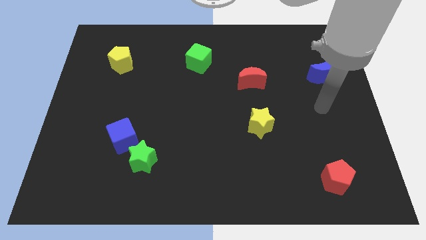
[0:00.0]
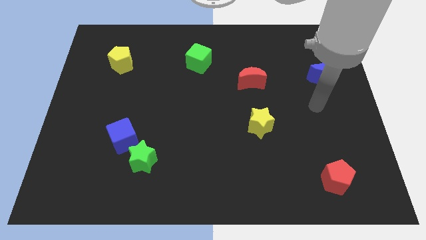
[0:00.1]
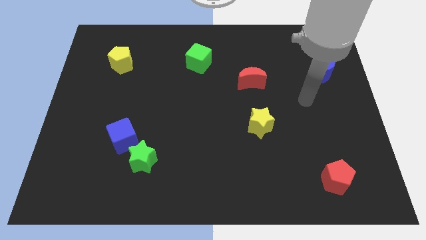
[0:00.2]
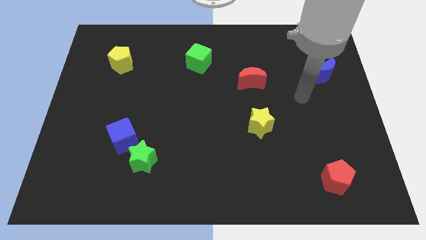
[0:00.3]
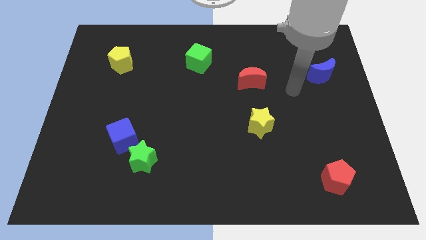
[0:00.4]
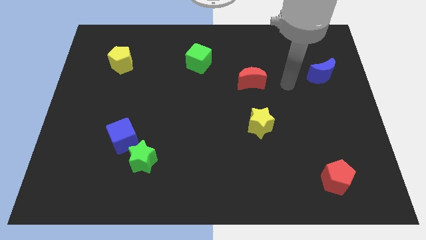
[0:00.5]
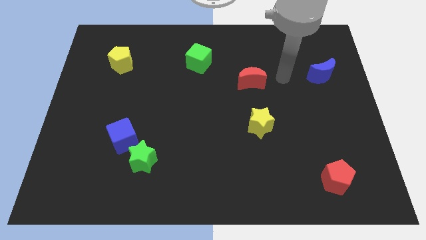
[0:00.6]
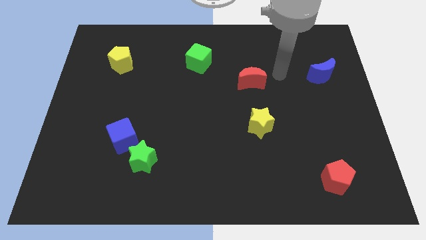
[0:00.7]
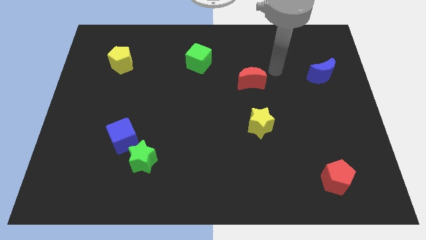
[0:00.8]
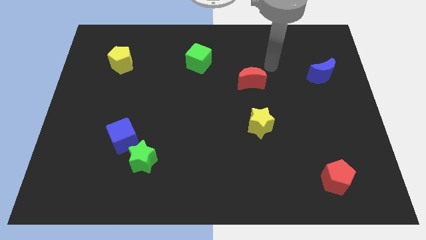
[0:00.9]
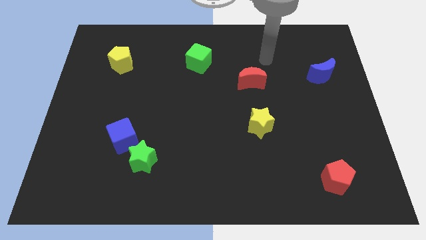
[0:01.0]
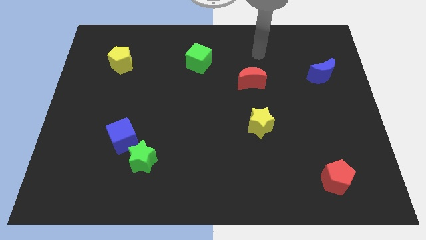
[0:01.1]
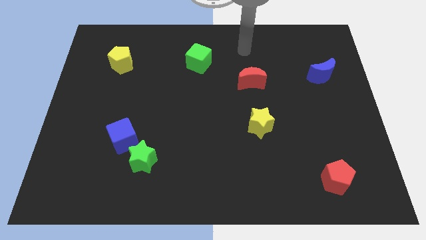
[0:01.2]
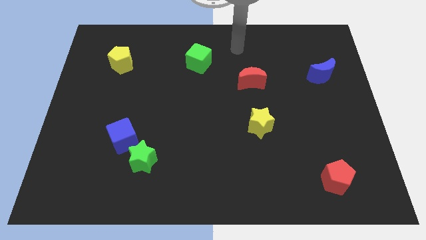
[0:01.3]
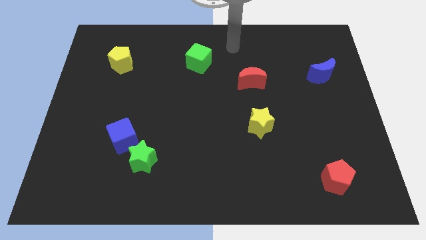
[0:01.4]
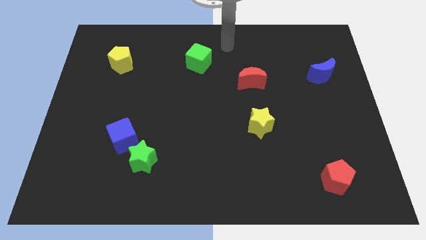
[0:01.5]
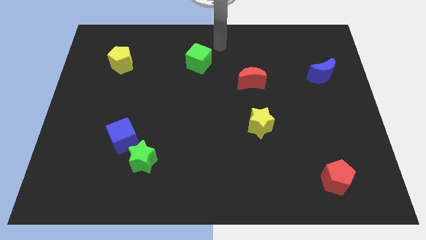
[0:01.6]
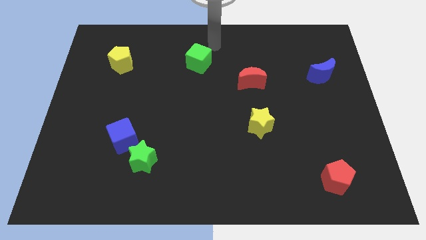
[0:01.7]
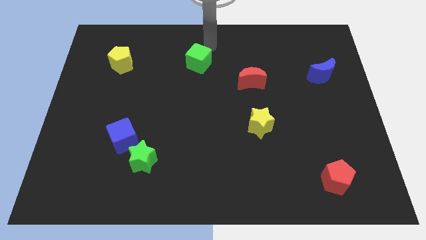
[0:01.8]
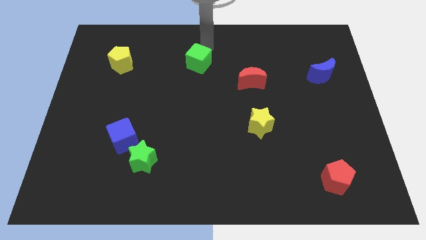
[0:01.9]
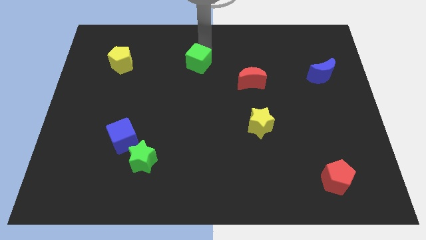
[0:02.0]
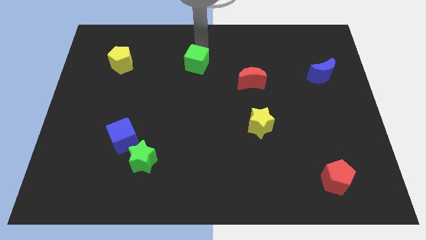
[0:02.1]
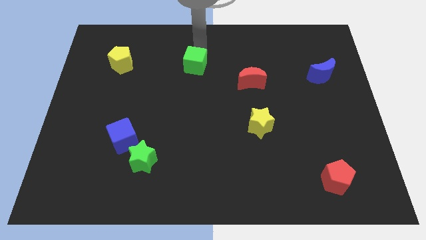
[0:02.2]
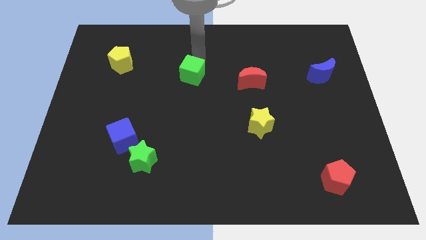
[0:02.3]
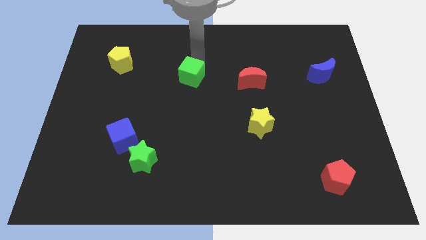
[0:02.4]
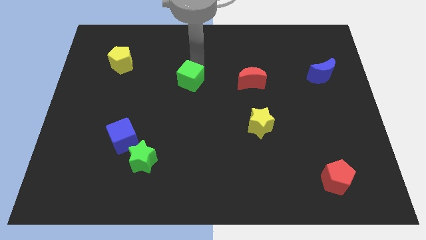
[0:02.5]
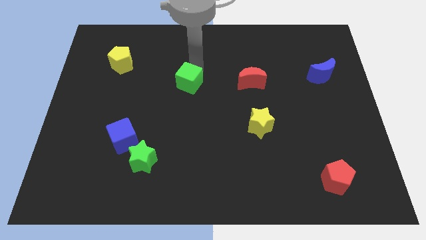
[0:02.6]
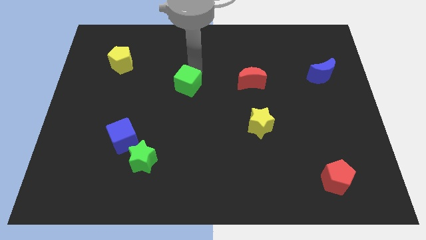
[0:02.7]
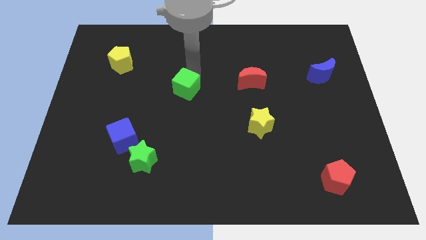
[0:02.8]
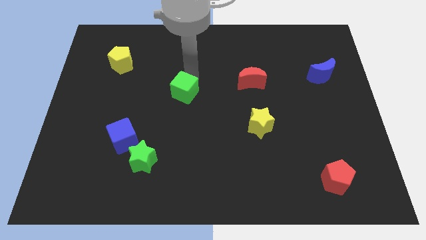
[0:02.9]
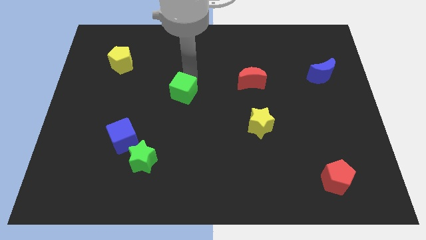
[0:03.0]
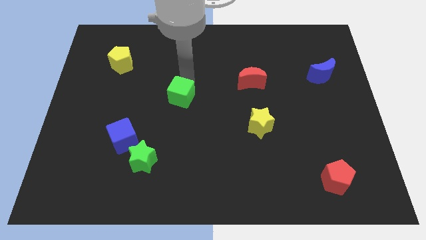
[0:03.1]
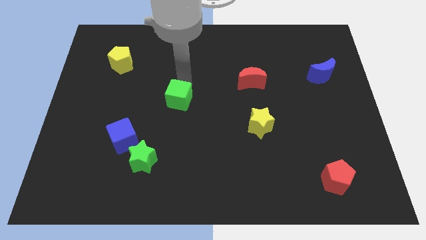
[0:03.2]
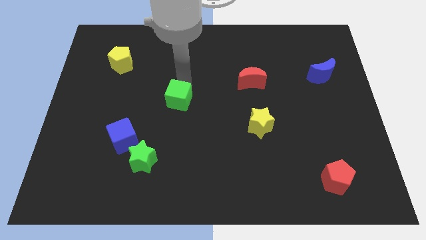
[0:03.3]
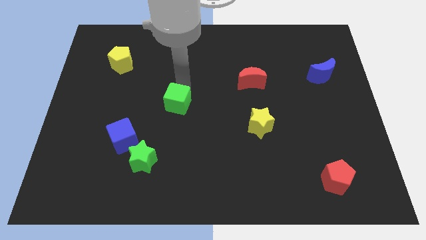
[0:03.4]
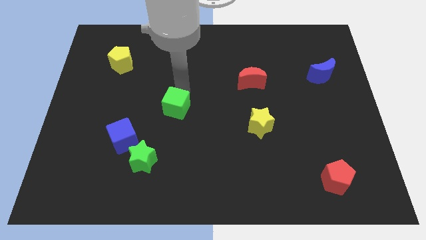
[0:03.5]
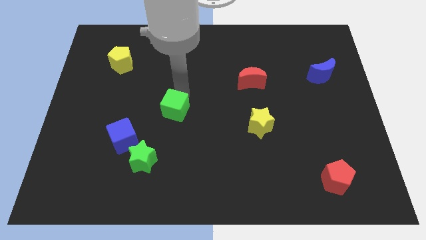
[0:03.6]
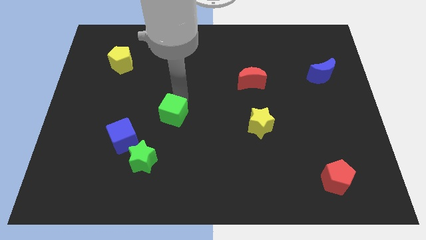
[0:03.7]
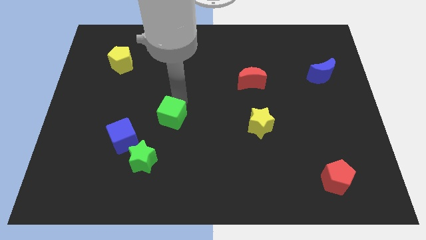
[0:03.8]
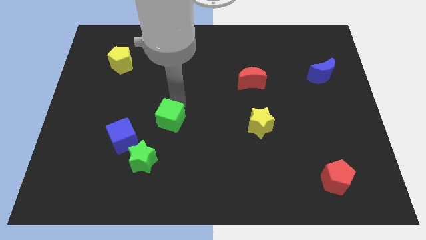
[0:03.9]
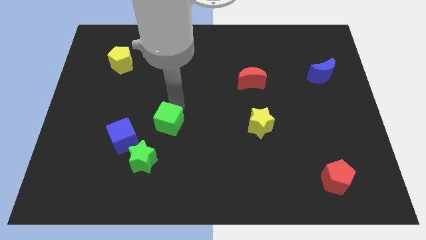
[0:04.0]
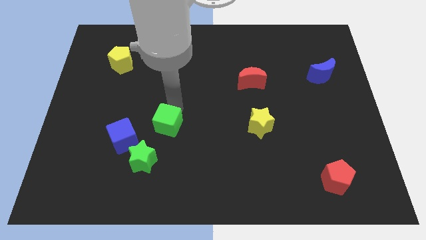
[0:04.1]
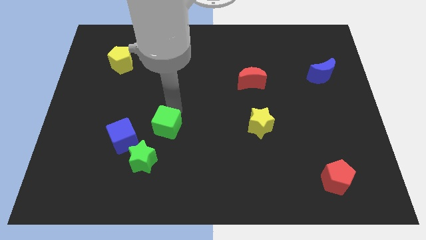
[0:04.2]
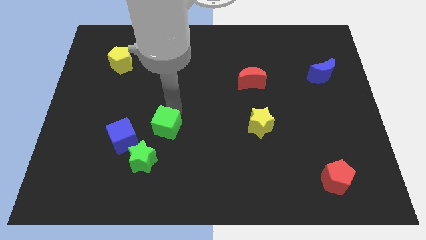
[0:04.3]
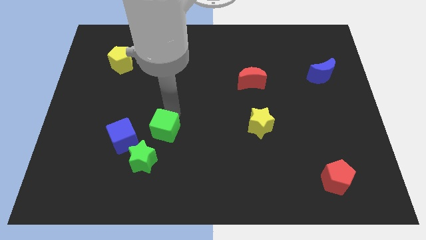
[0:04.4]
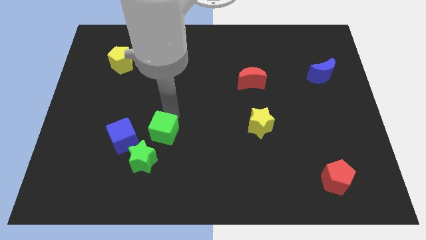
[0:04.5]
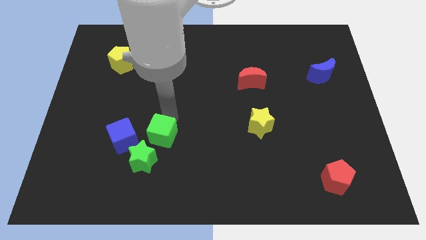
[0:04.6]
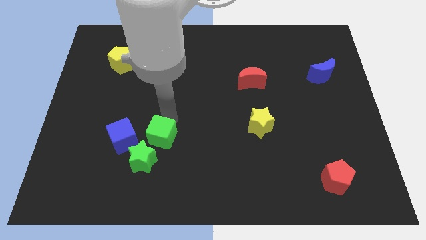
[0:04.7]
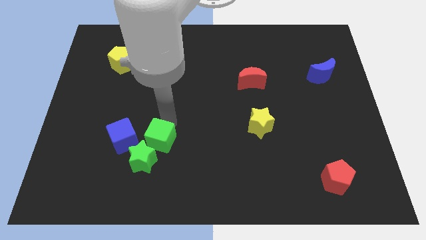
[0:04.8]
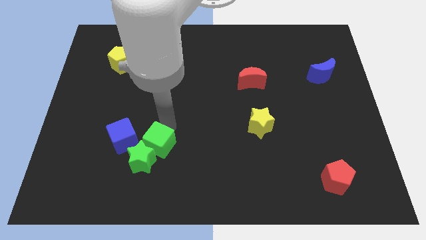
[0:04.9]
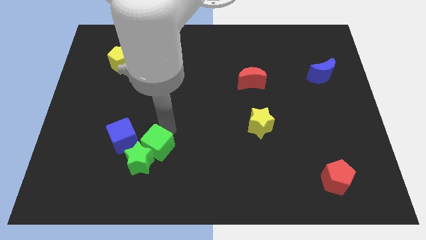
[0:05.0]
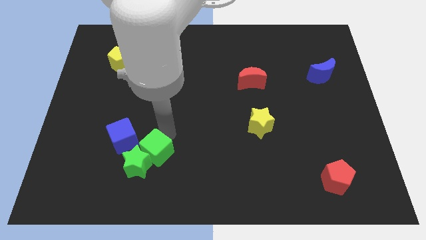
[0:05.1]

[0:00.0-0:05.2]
push the green cube to the green star

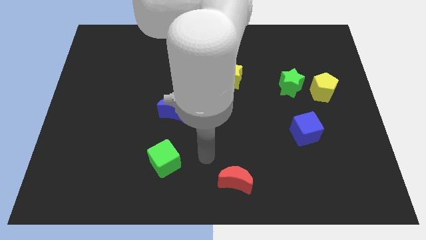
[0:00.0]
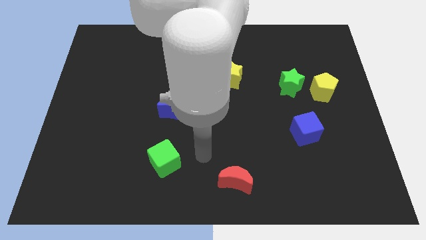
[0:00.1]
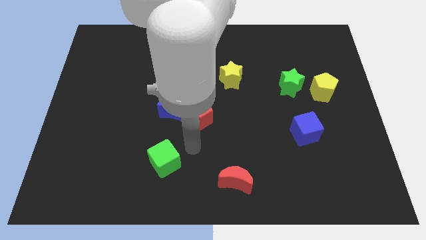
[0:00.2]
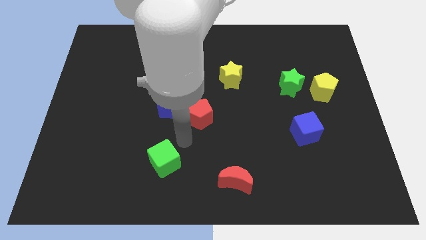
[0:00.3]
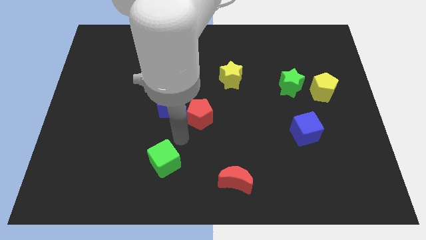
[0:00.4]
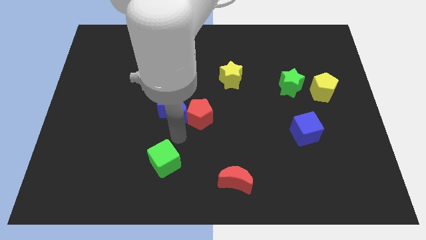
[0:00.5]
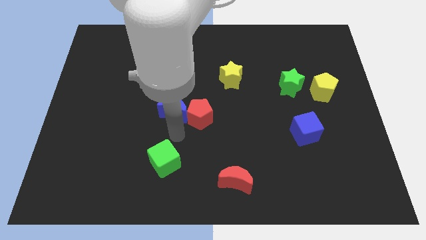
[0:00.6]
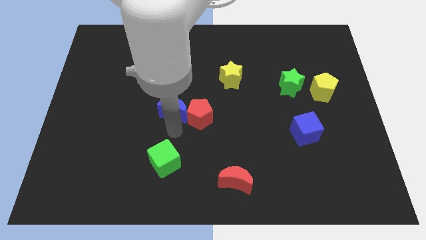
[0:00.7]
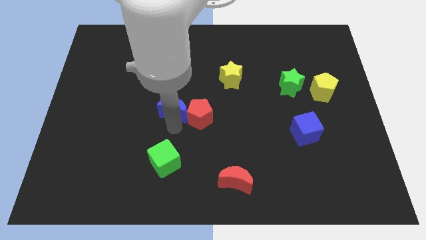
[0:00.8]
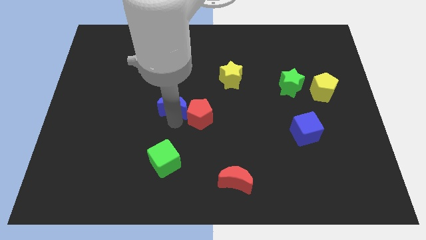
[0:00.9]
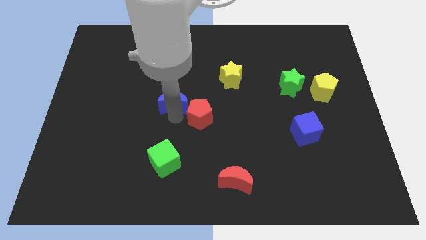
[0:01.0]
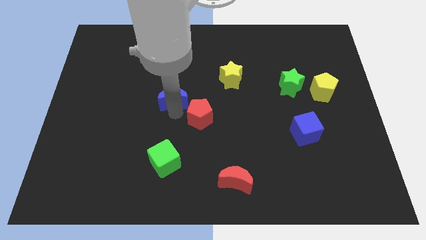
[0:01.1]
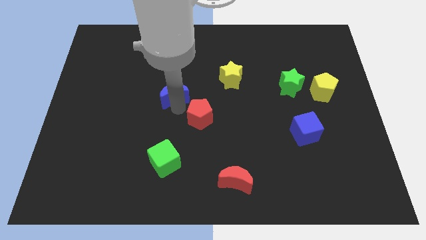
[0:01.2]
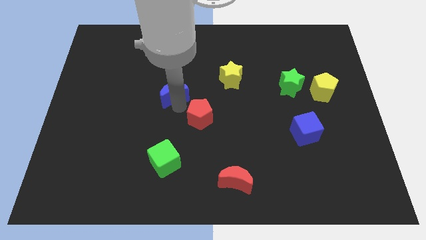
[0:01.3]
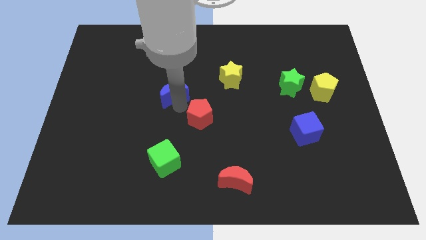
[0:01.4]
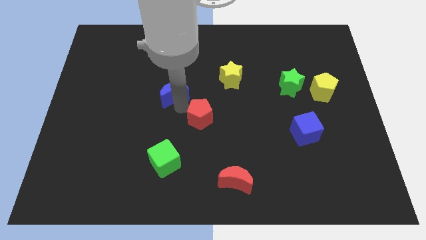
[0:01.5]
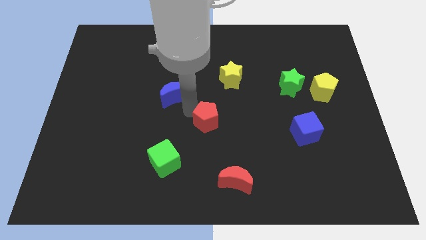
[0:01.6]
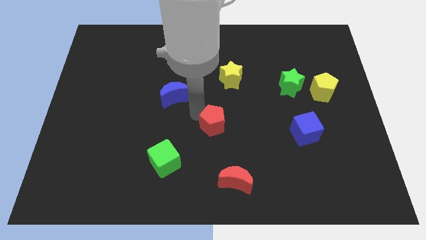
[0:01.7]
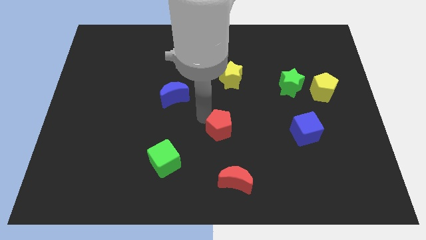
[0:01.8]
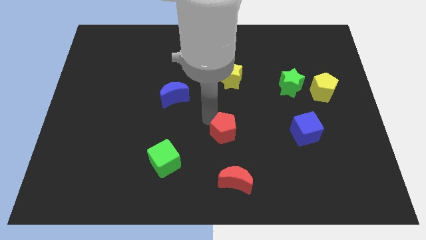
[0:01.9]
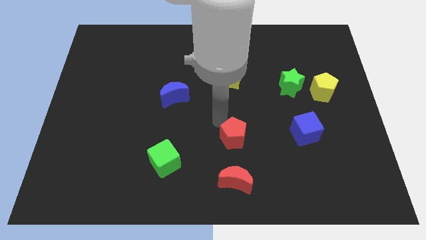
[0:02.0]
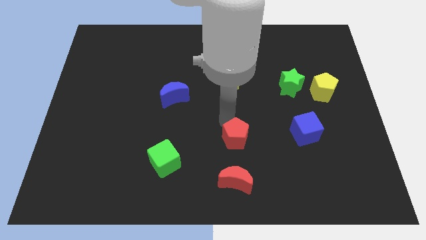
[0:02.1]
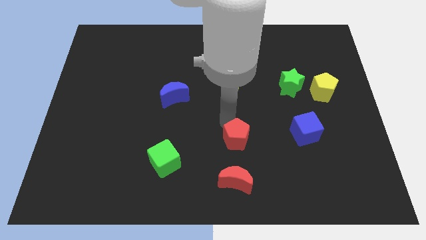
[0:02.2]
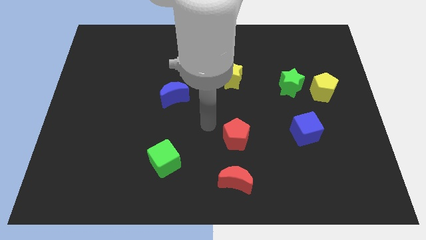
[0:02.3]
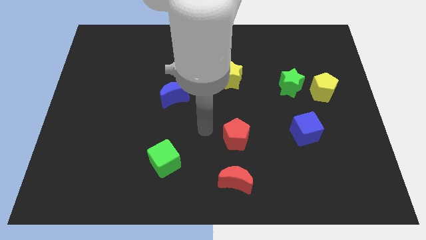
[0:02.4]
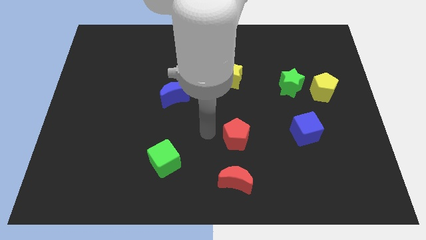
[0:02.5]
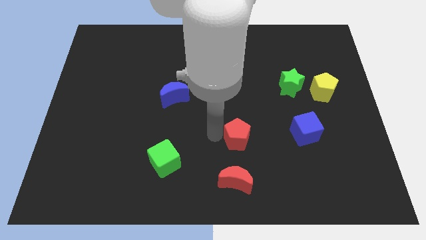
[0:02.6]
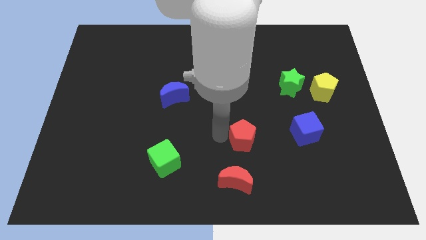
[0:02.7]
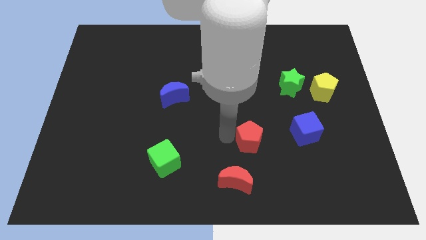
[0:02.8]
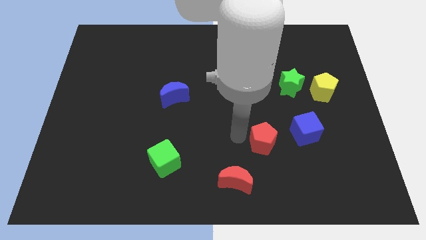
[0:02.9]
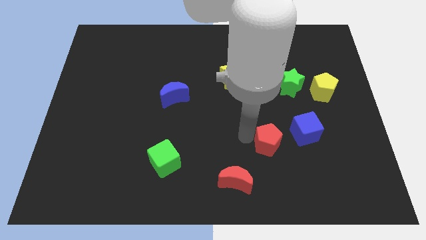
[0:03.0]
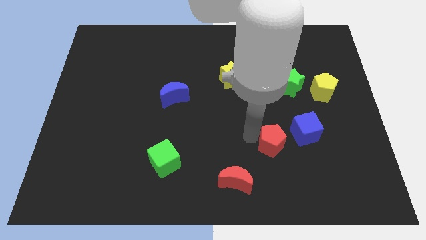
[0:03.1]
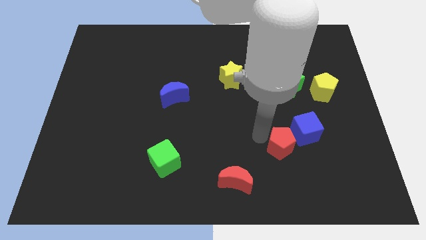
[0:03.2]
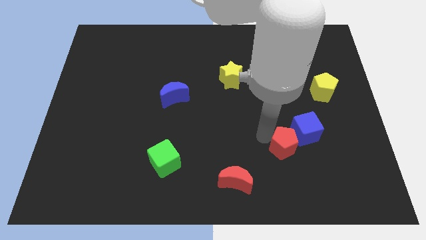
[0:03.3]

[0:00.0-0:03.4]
push the red pentagon next to the blue cube
